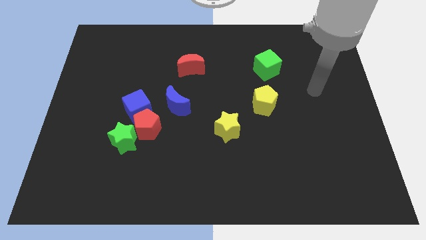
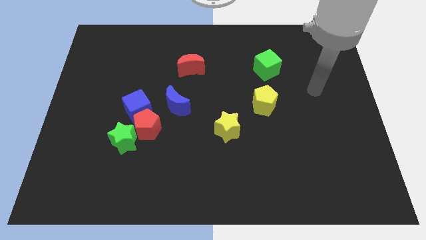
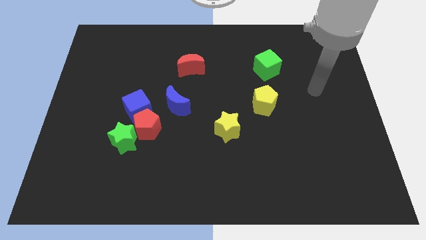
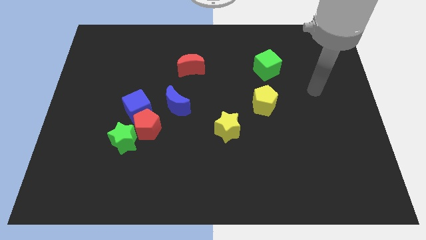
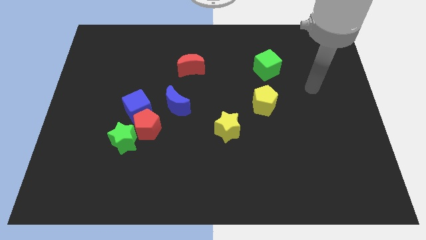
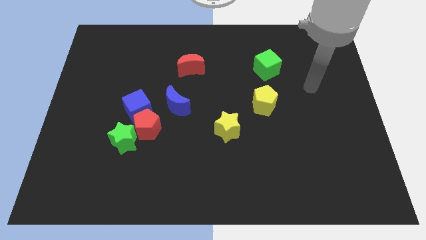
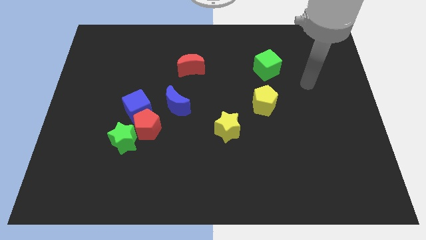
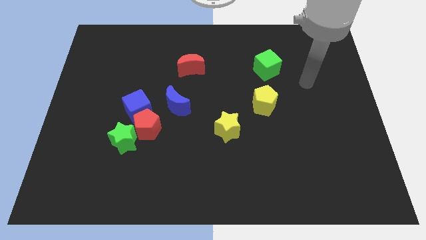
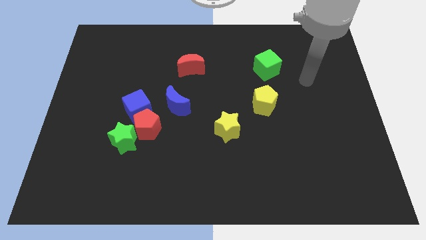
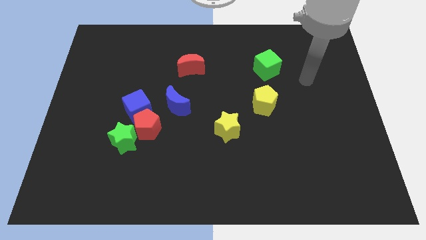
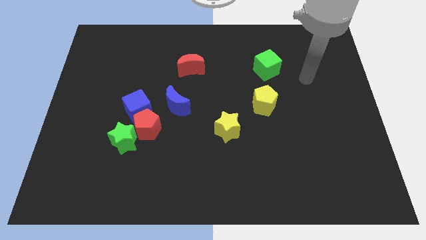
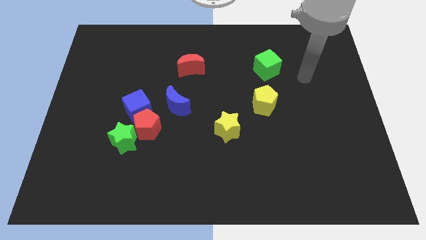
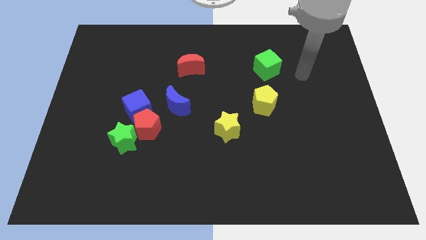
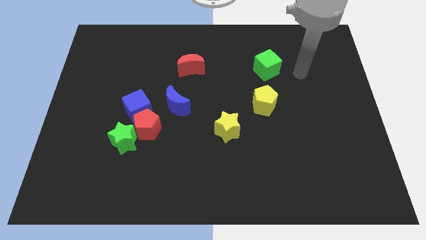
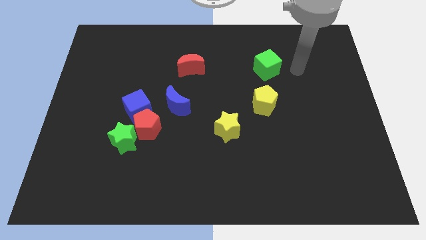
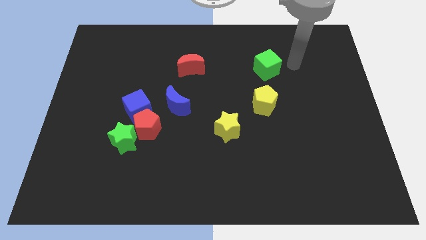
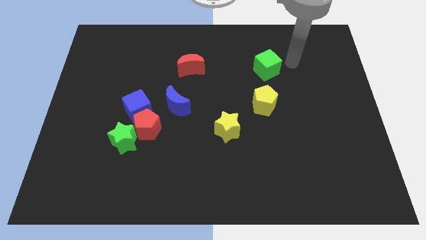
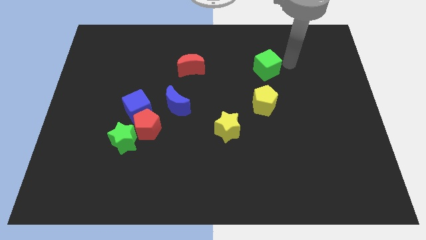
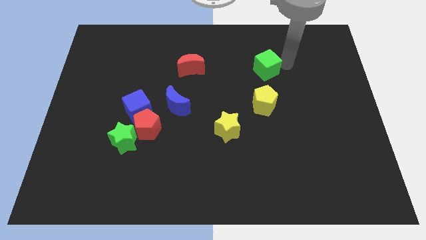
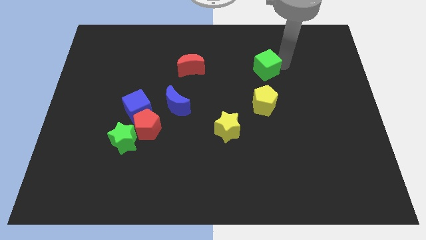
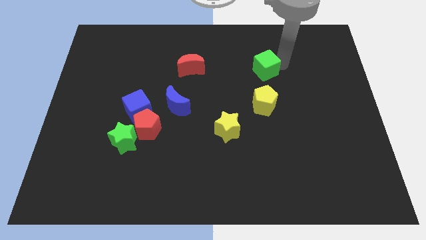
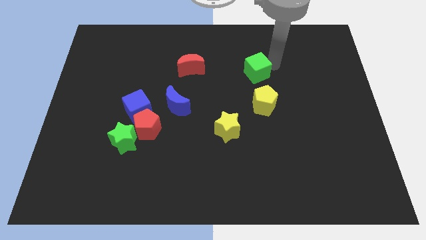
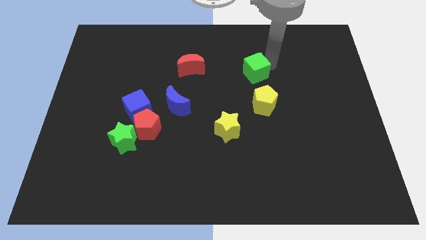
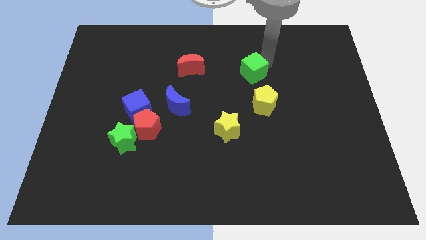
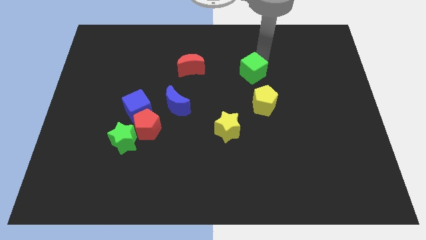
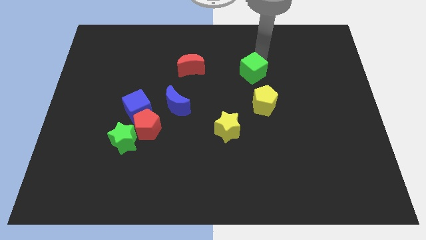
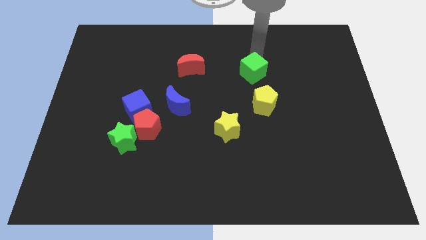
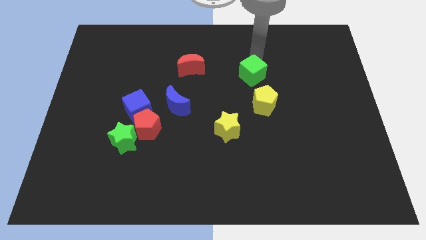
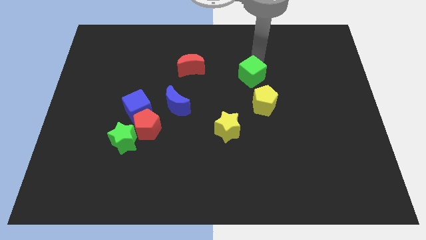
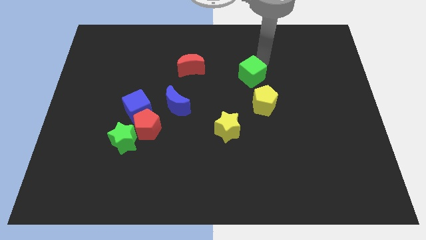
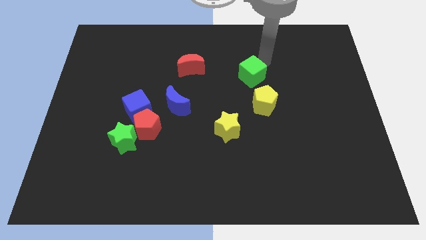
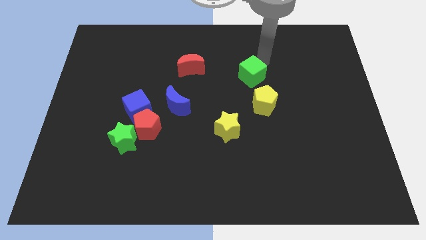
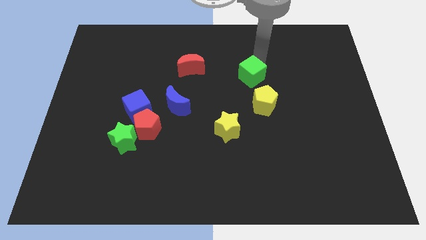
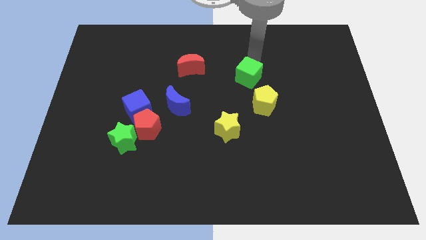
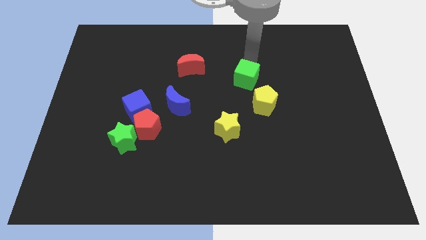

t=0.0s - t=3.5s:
move the green cube slightly towards the center of the board

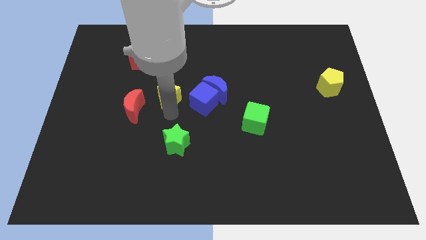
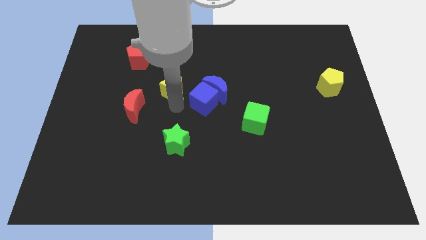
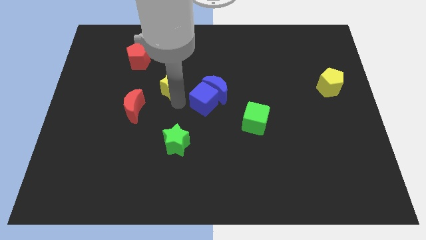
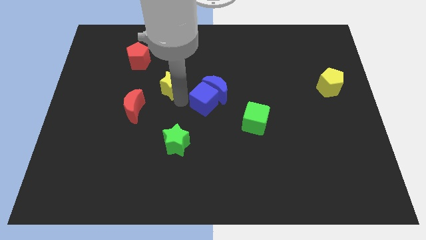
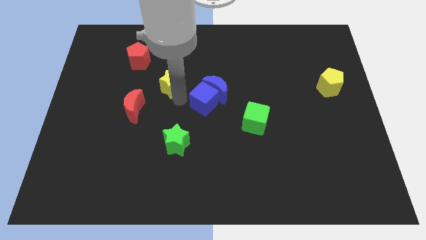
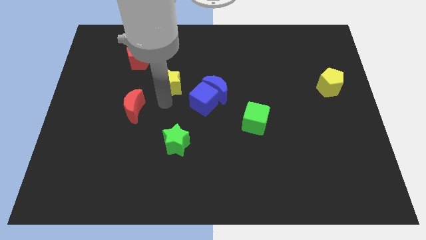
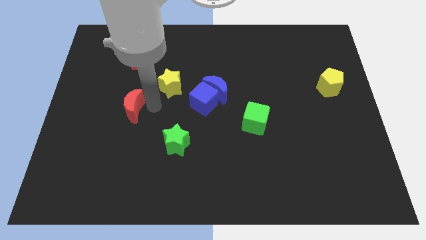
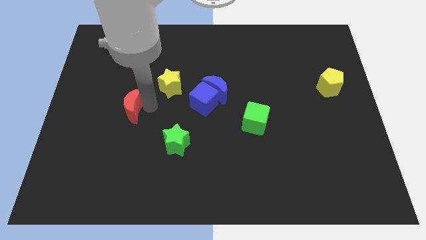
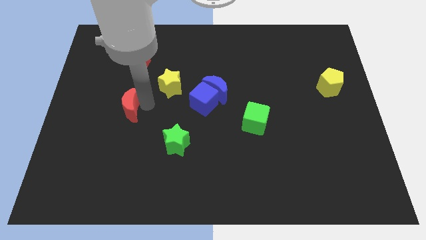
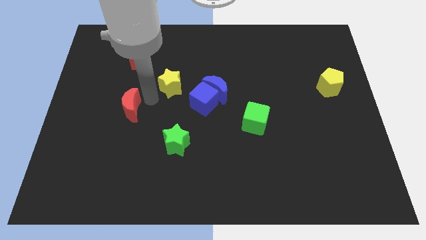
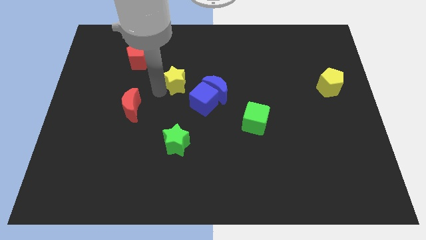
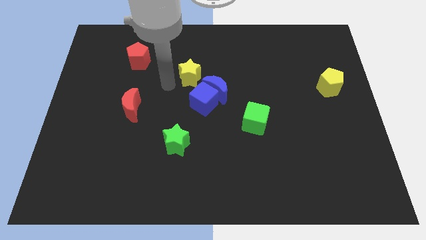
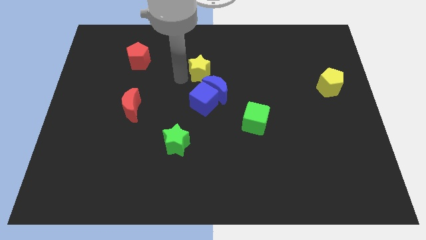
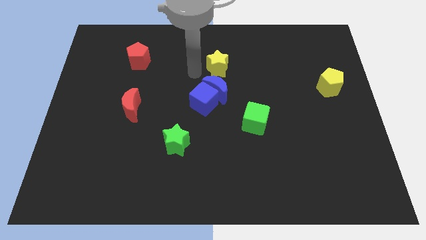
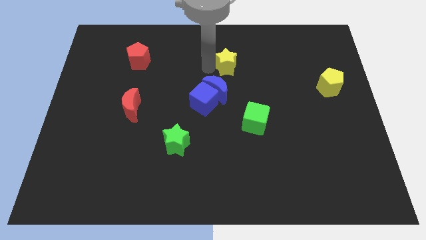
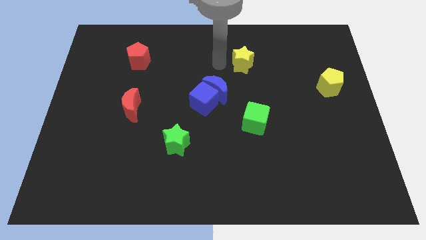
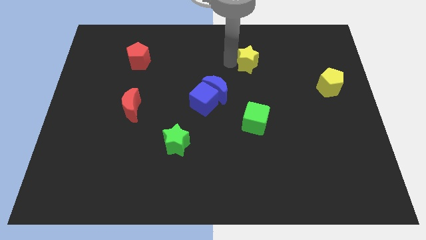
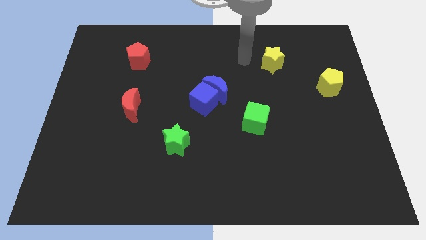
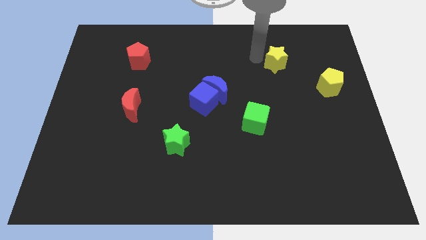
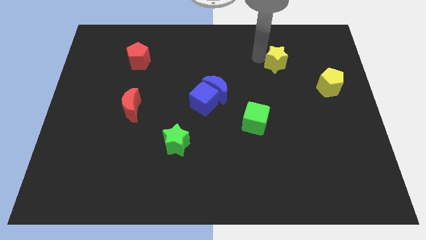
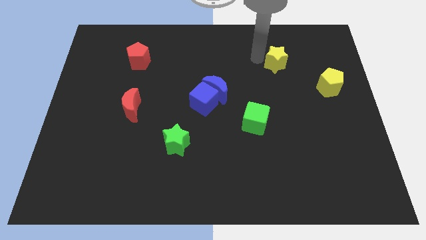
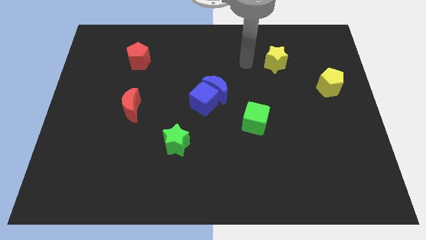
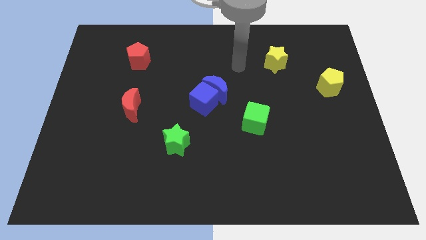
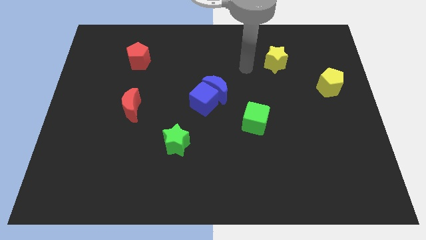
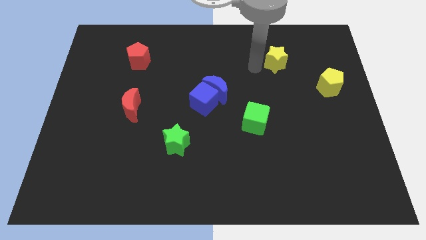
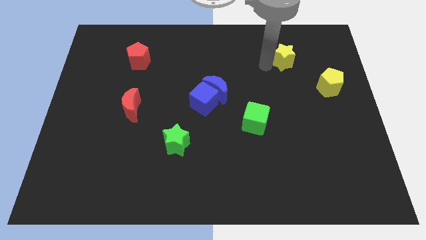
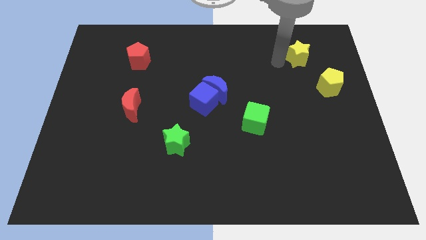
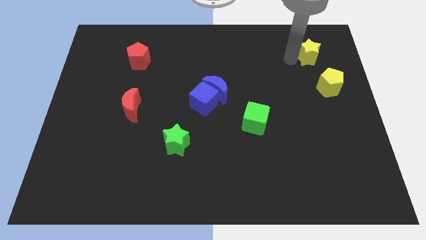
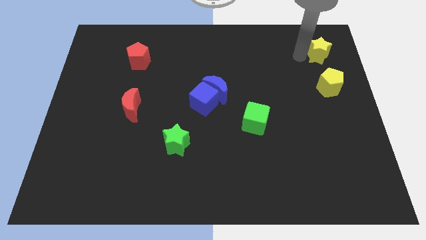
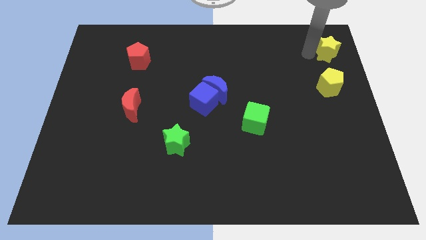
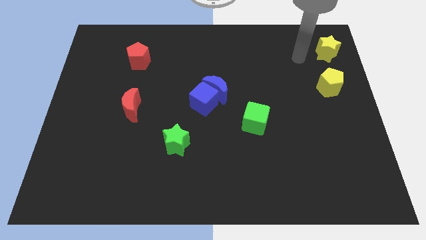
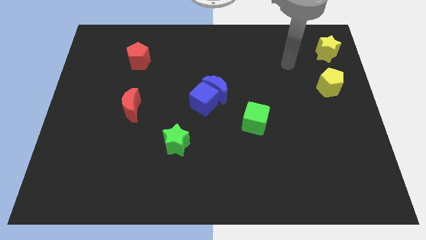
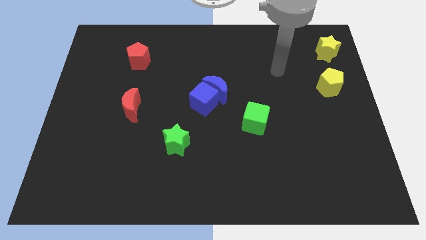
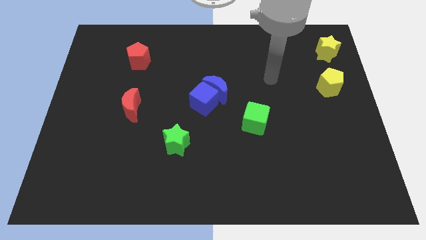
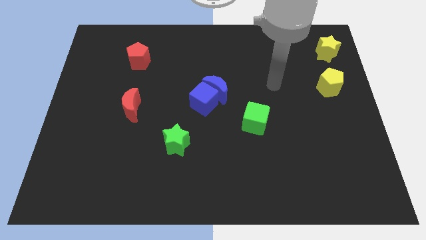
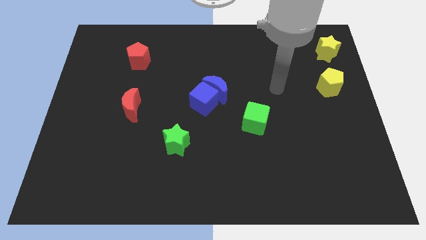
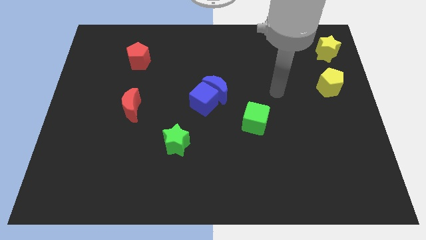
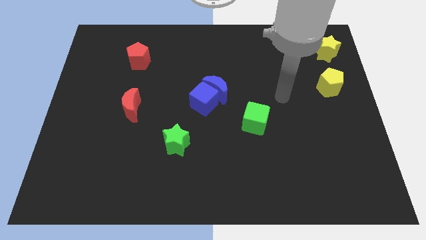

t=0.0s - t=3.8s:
push the yellow star towards the top right corner of the board

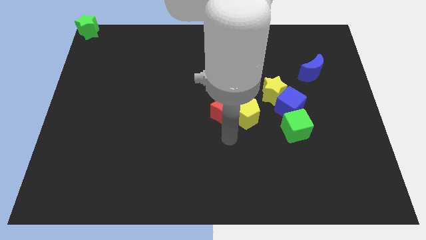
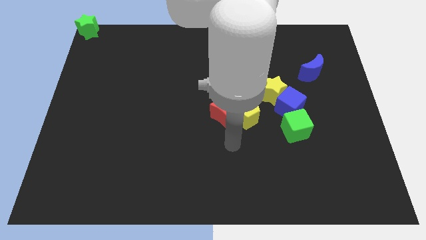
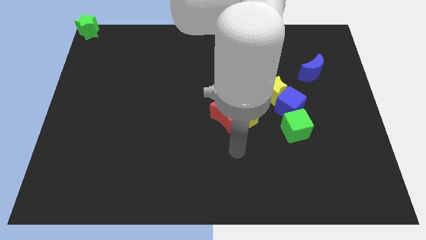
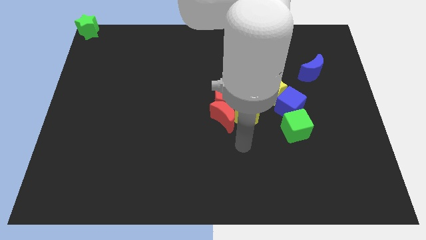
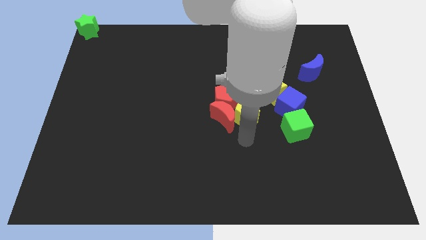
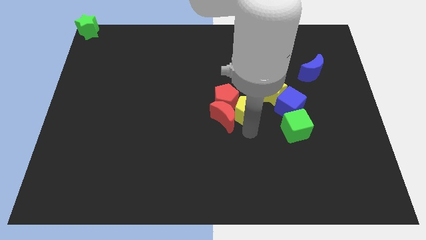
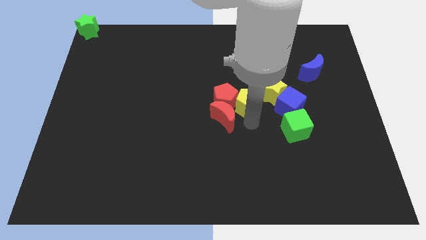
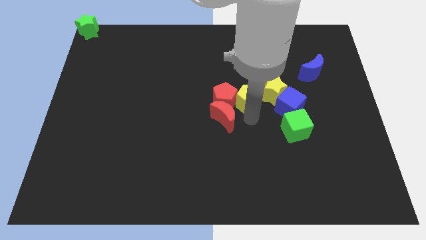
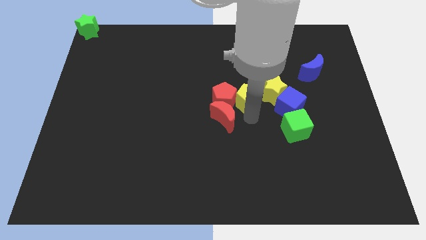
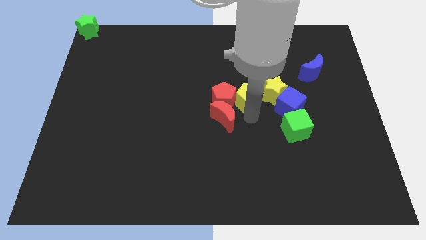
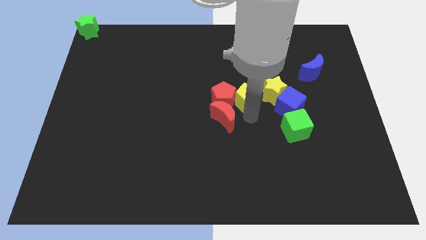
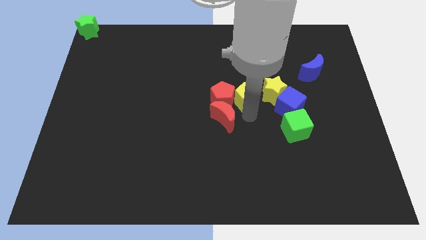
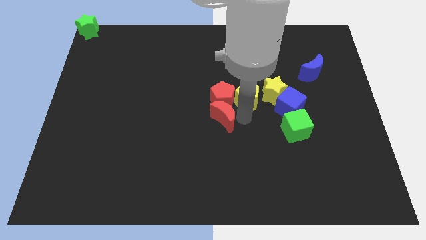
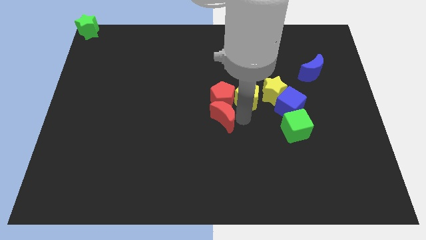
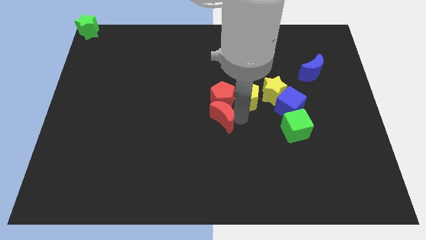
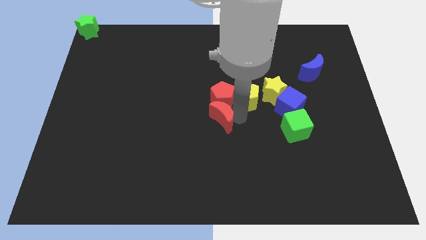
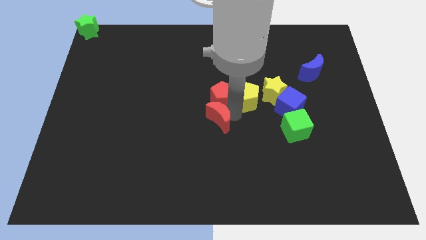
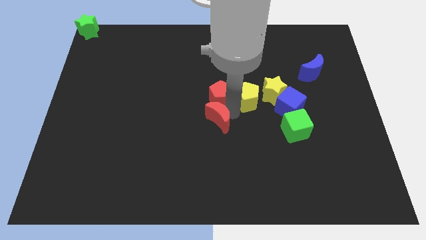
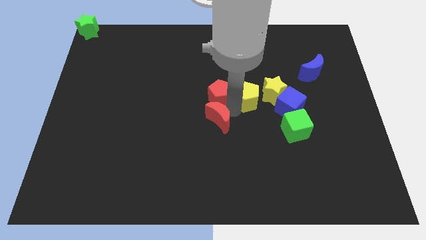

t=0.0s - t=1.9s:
place the yellow pentagon right to the red pentagon
